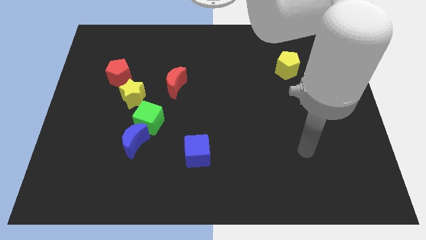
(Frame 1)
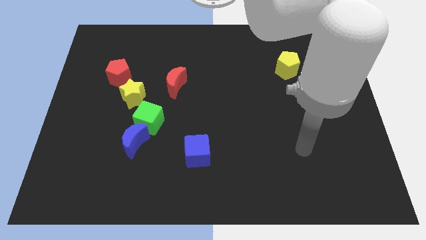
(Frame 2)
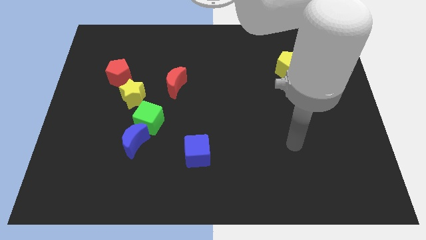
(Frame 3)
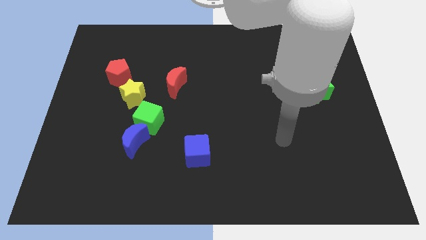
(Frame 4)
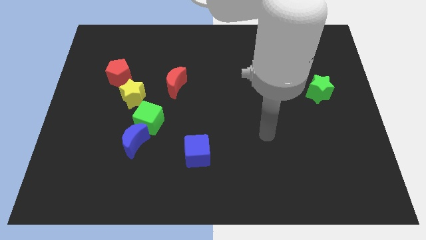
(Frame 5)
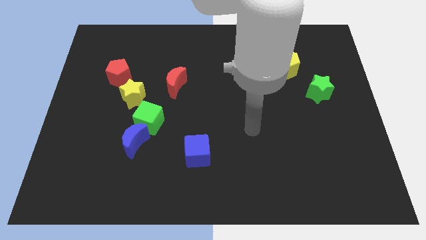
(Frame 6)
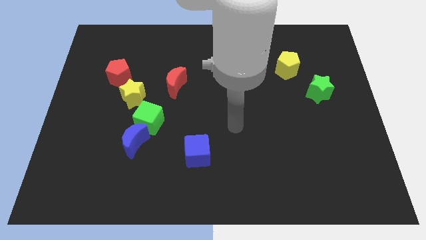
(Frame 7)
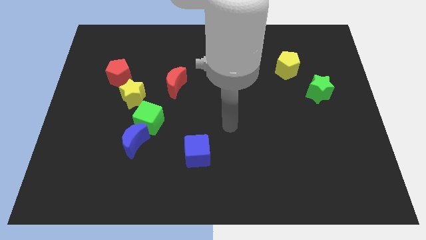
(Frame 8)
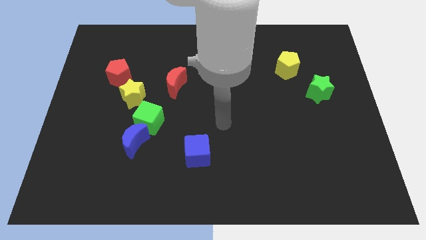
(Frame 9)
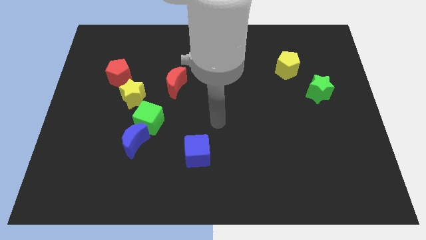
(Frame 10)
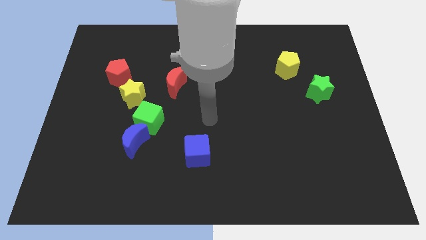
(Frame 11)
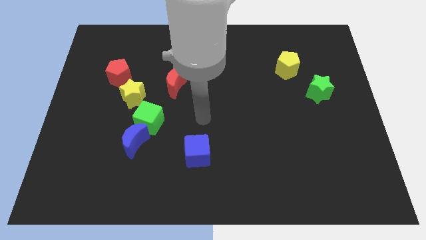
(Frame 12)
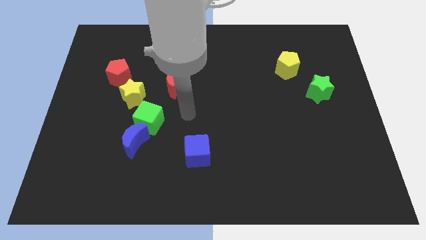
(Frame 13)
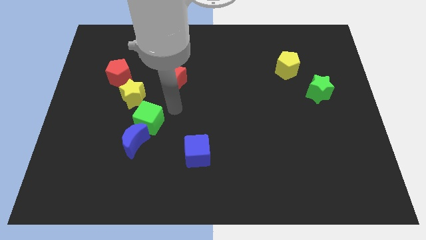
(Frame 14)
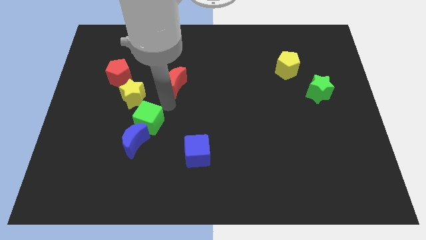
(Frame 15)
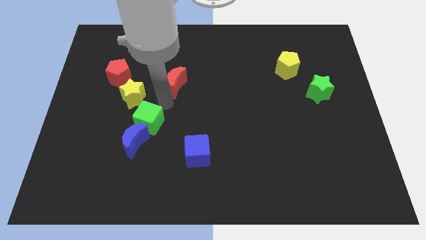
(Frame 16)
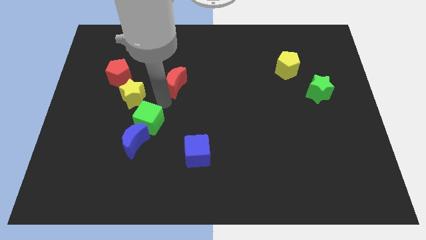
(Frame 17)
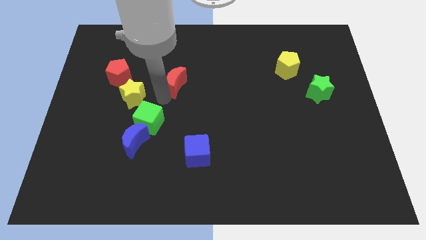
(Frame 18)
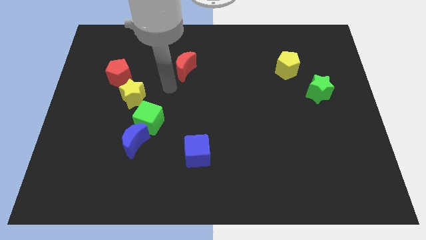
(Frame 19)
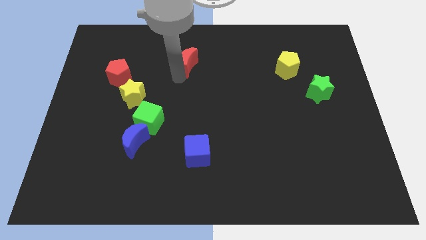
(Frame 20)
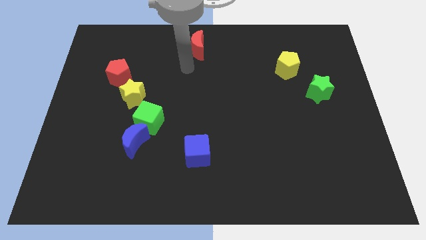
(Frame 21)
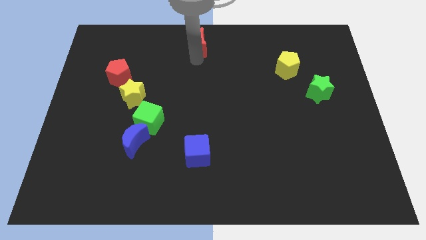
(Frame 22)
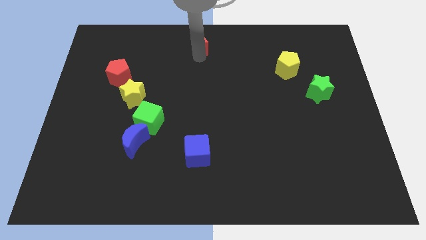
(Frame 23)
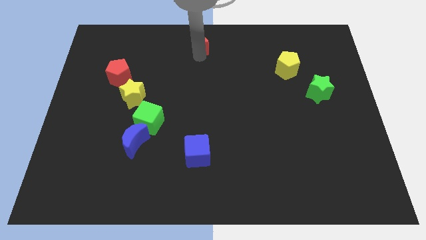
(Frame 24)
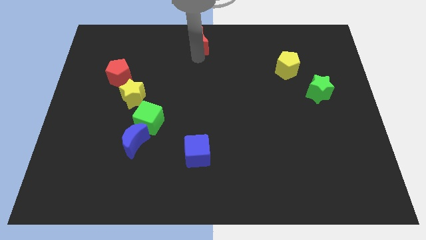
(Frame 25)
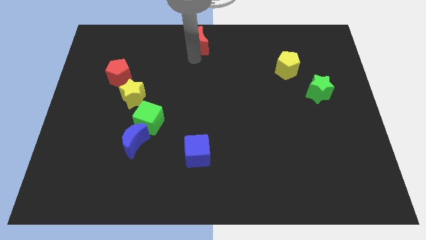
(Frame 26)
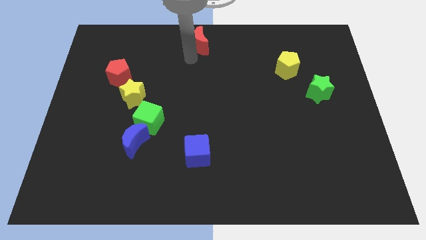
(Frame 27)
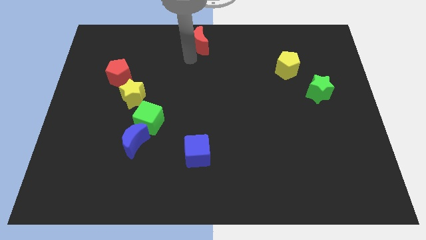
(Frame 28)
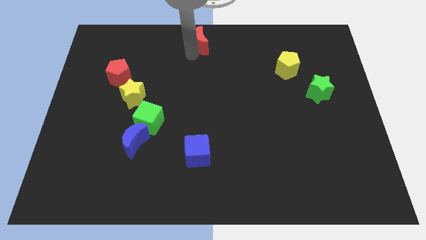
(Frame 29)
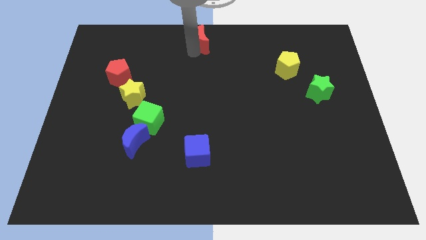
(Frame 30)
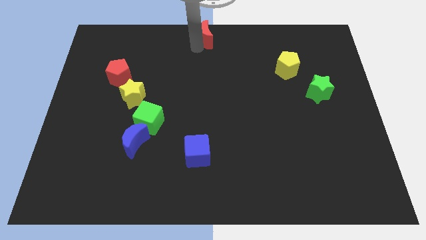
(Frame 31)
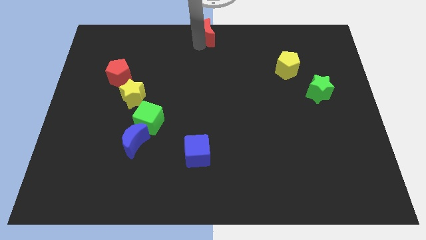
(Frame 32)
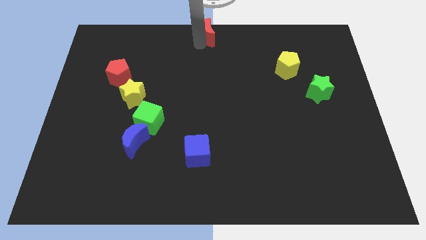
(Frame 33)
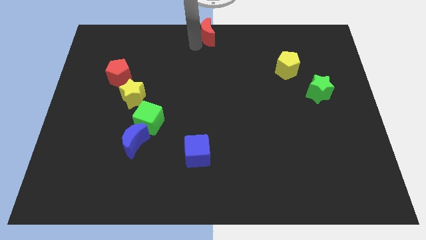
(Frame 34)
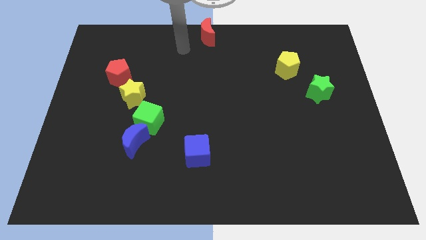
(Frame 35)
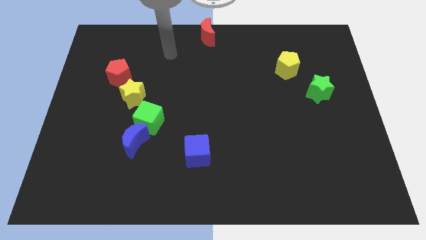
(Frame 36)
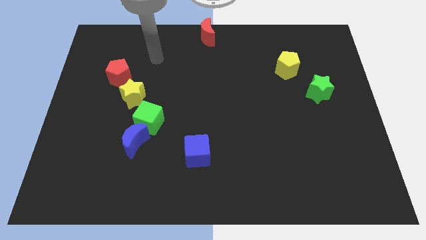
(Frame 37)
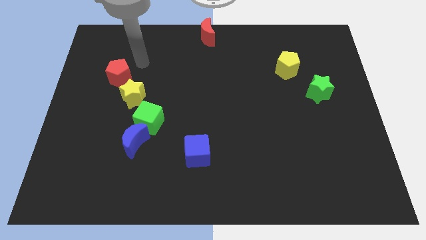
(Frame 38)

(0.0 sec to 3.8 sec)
move the red crescent to the top center on the board

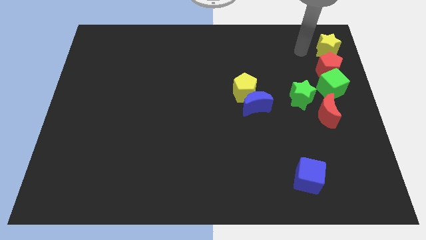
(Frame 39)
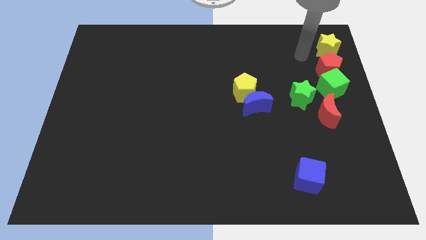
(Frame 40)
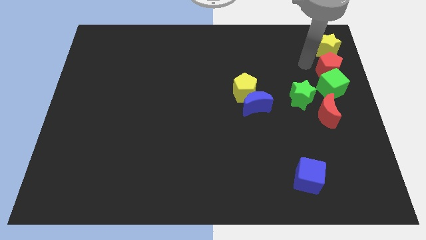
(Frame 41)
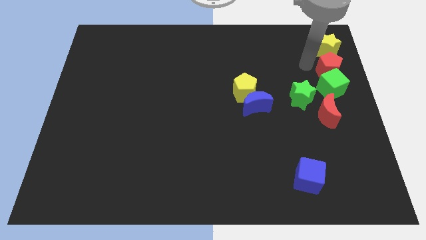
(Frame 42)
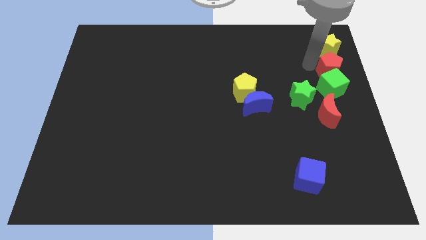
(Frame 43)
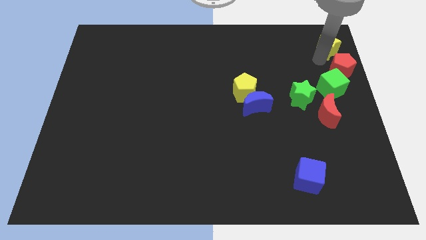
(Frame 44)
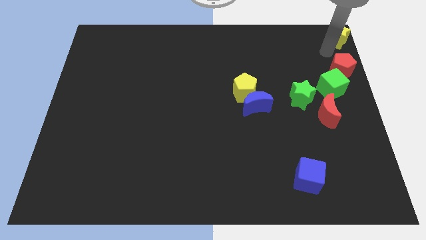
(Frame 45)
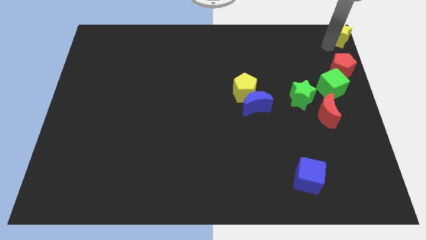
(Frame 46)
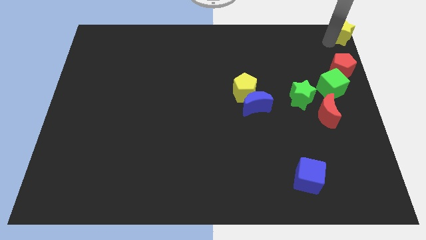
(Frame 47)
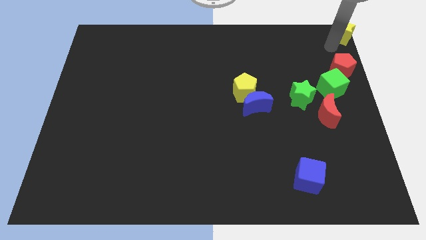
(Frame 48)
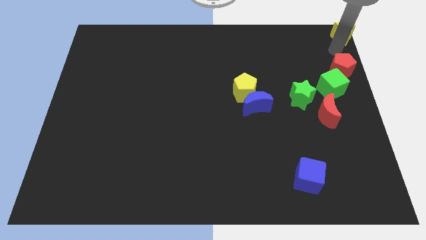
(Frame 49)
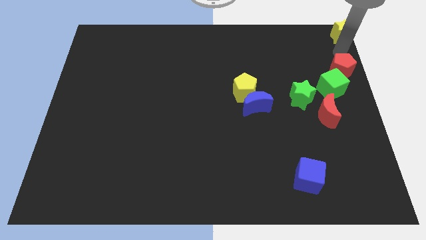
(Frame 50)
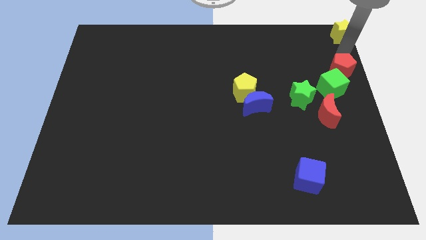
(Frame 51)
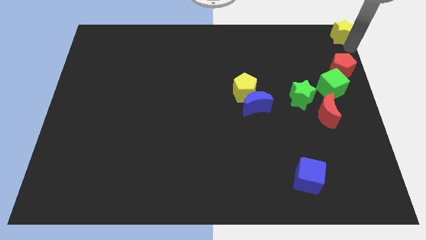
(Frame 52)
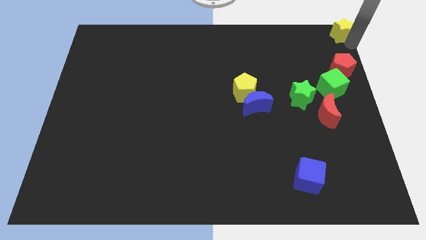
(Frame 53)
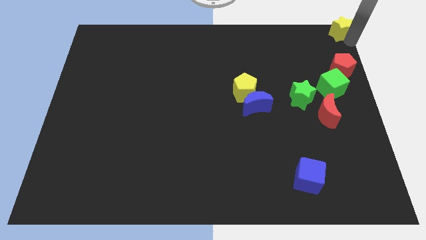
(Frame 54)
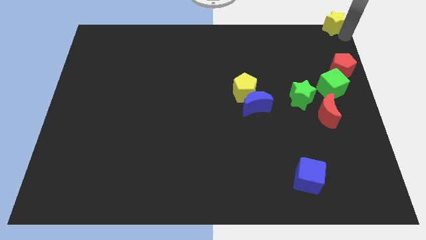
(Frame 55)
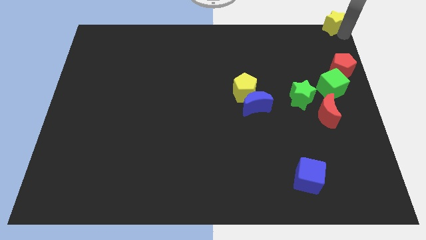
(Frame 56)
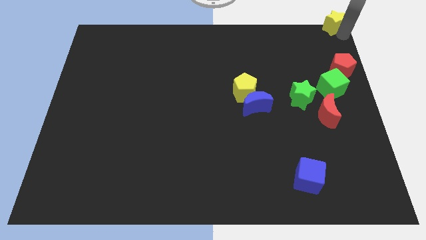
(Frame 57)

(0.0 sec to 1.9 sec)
move the yellow star top right corner of the board

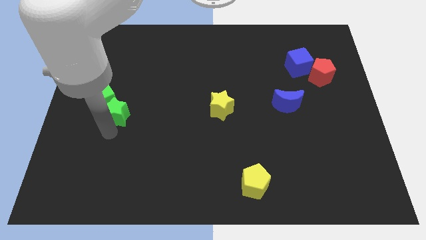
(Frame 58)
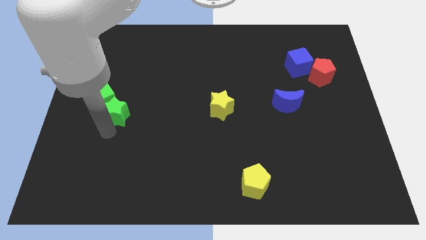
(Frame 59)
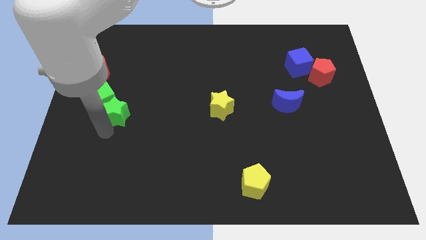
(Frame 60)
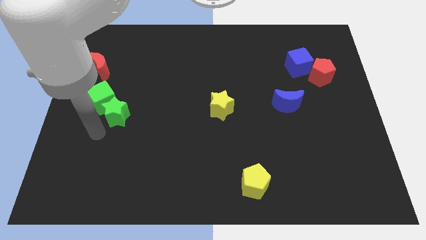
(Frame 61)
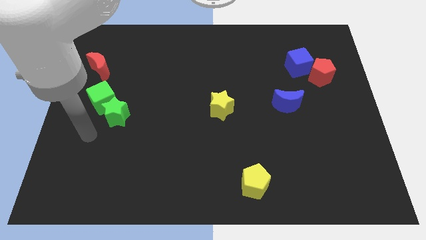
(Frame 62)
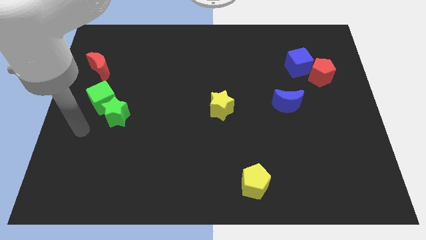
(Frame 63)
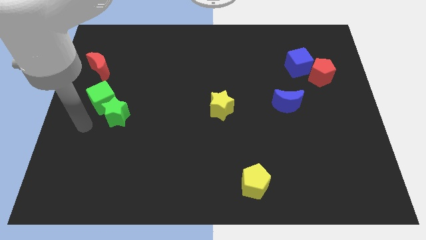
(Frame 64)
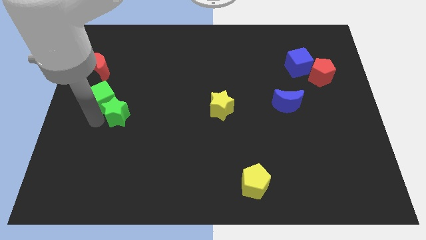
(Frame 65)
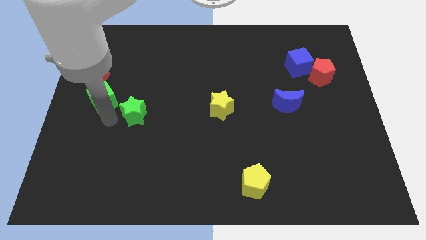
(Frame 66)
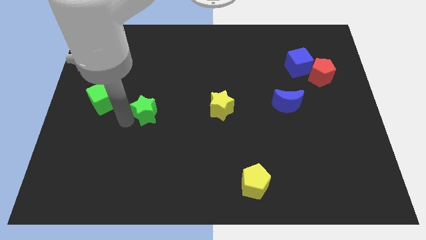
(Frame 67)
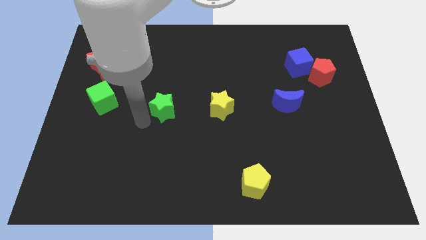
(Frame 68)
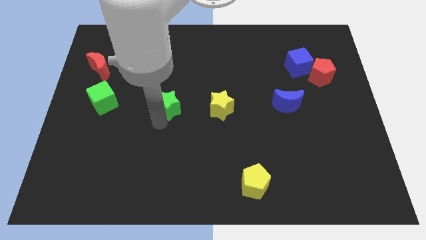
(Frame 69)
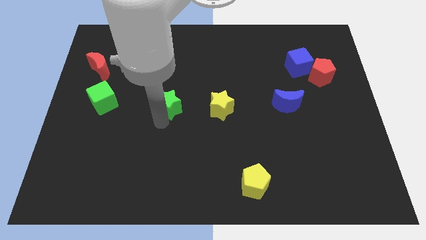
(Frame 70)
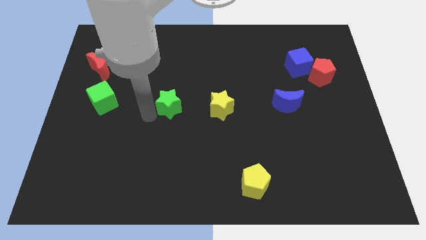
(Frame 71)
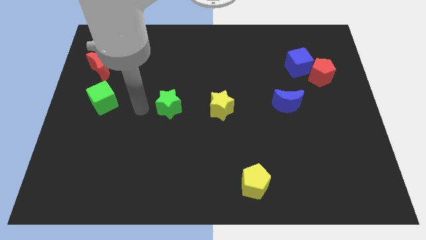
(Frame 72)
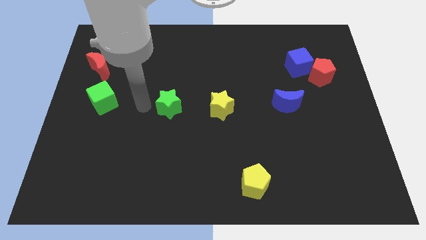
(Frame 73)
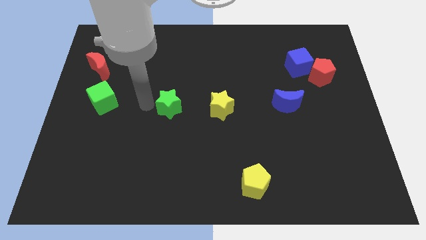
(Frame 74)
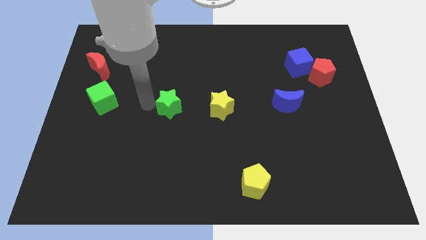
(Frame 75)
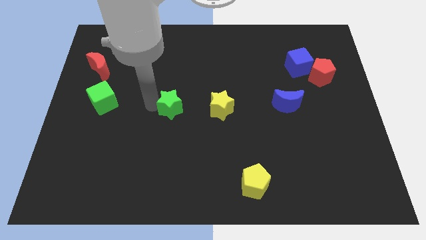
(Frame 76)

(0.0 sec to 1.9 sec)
move green star towards yellow star

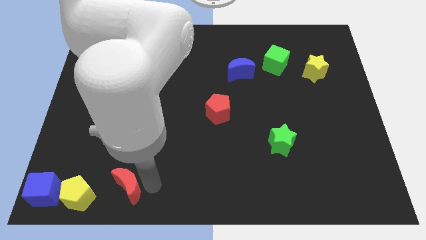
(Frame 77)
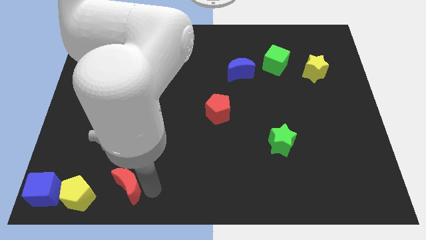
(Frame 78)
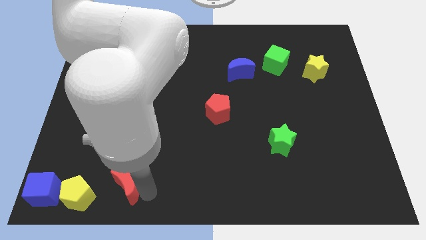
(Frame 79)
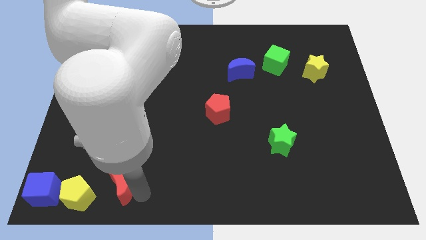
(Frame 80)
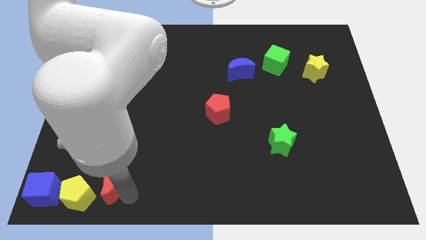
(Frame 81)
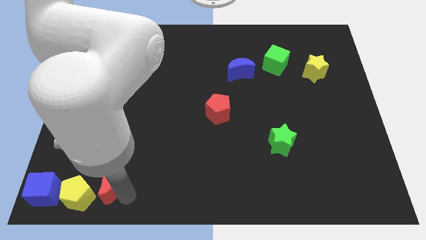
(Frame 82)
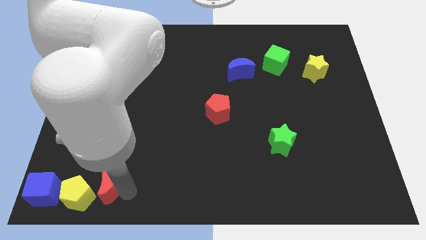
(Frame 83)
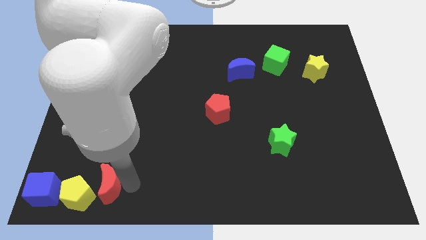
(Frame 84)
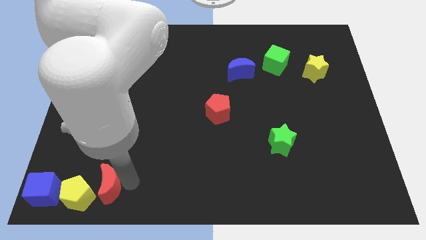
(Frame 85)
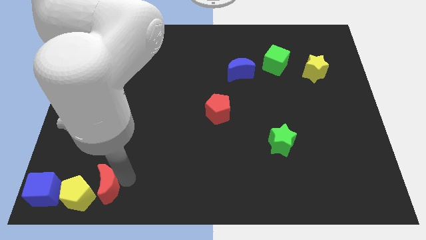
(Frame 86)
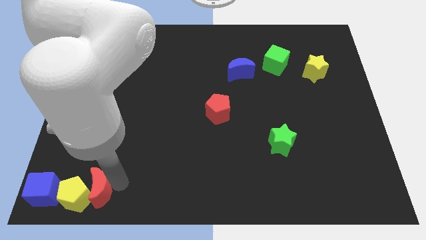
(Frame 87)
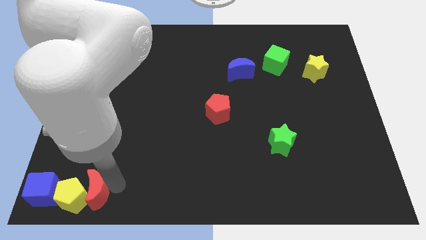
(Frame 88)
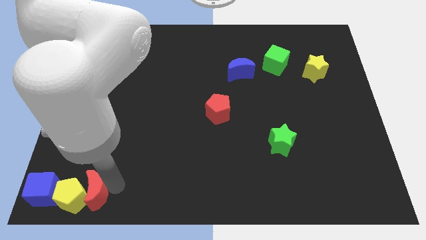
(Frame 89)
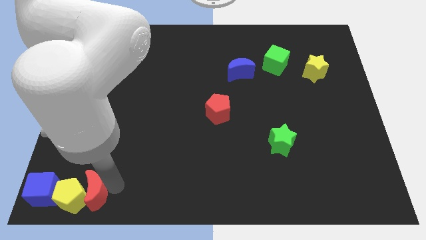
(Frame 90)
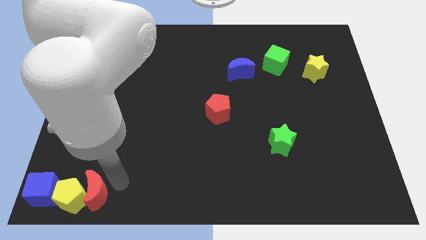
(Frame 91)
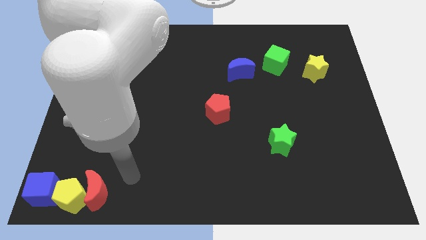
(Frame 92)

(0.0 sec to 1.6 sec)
move the red crescent into the yellow pentagon
